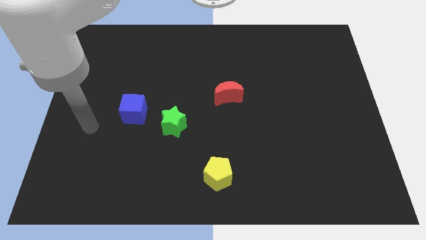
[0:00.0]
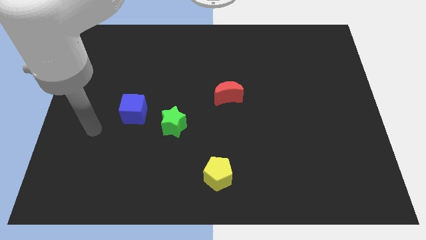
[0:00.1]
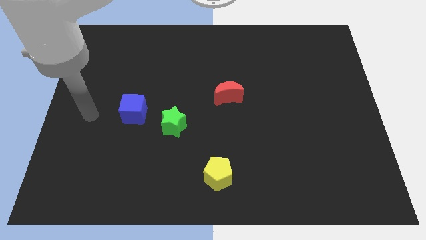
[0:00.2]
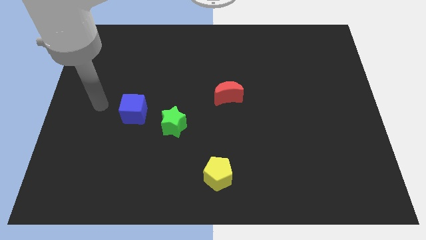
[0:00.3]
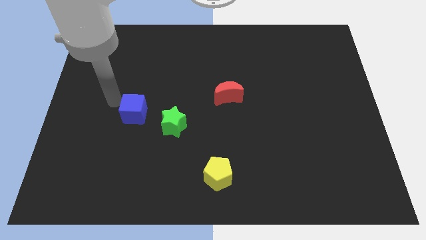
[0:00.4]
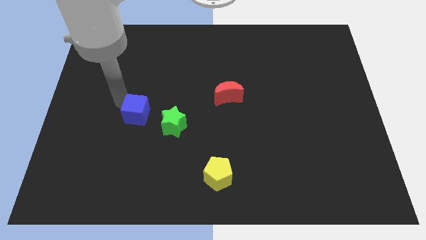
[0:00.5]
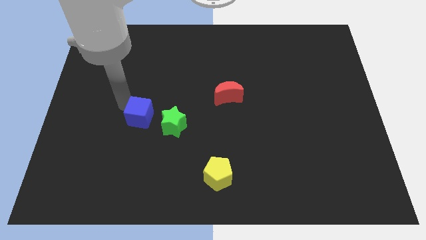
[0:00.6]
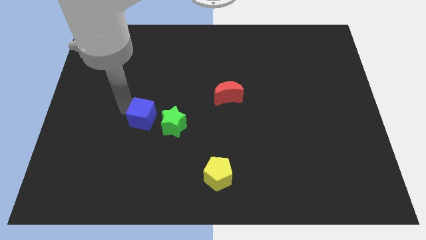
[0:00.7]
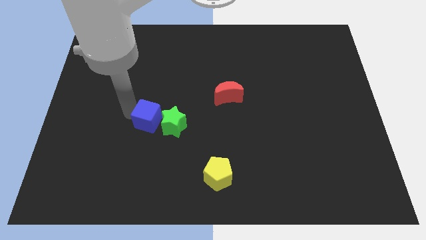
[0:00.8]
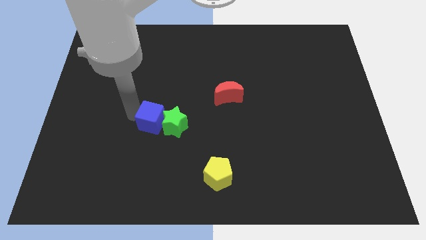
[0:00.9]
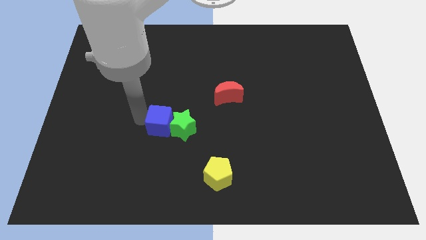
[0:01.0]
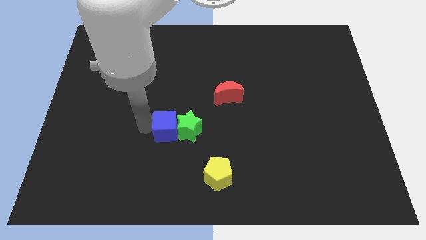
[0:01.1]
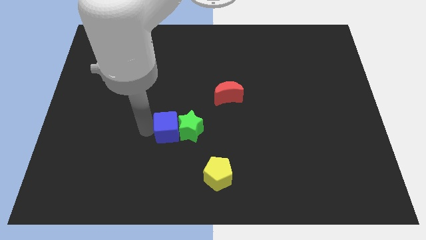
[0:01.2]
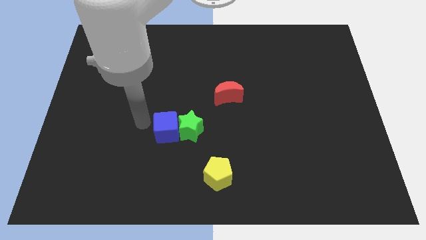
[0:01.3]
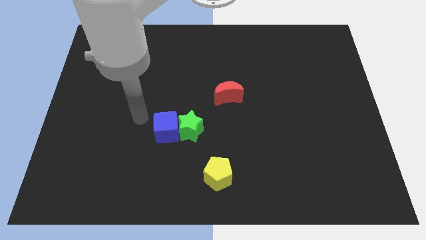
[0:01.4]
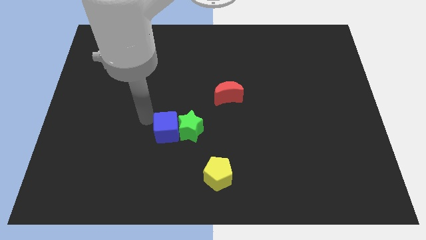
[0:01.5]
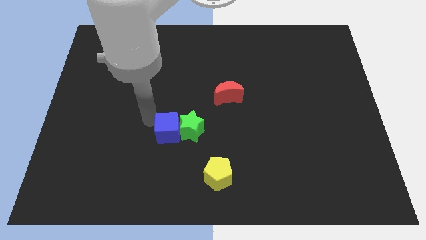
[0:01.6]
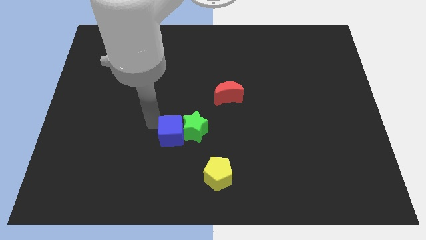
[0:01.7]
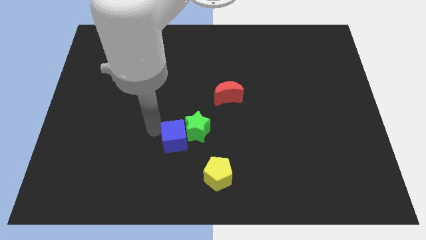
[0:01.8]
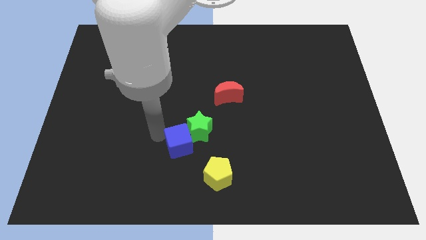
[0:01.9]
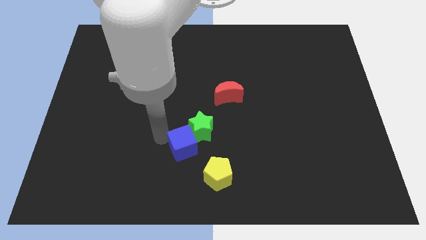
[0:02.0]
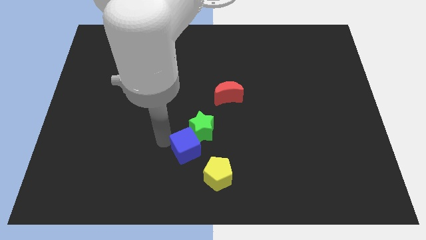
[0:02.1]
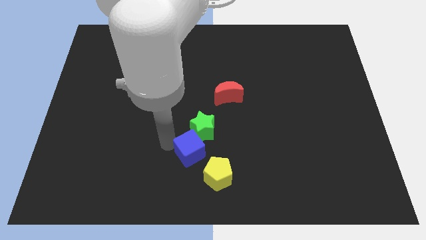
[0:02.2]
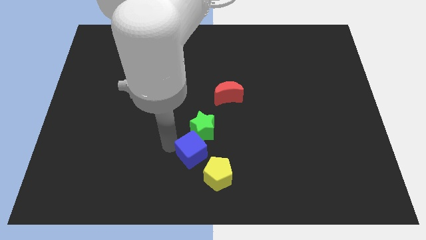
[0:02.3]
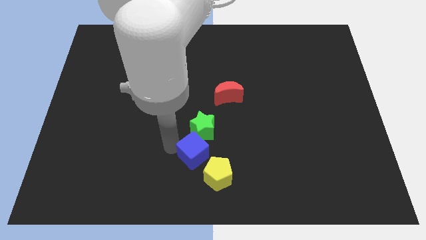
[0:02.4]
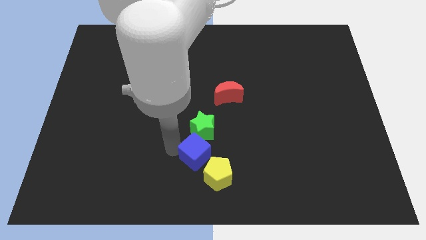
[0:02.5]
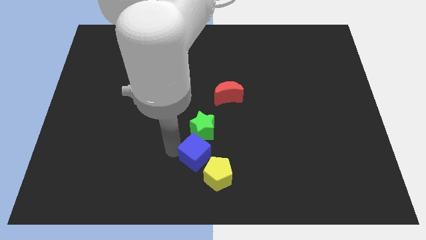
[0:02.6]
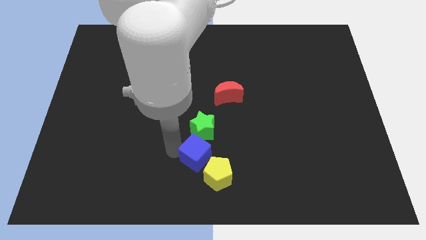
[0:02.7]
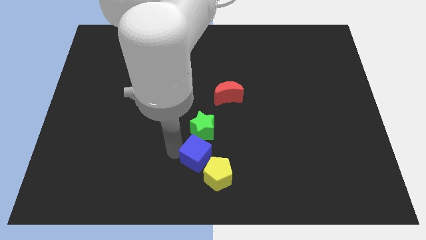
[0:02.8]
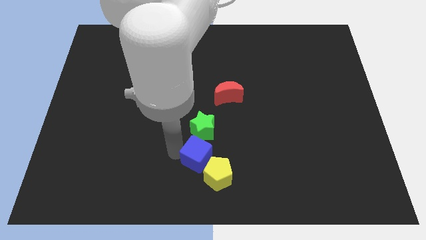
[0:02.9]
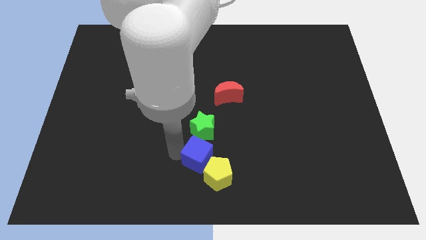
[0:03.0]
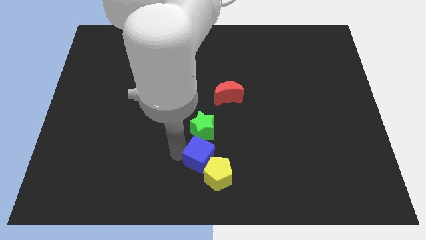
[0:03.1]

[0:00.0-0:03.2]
slide the cube towards the yellow pentagon

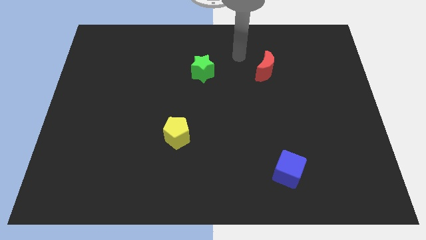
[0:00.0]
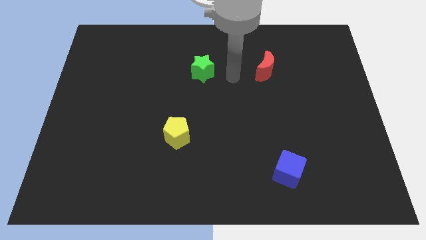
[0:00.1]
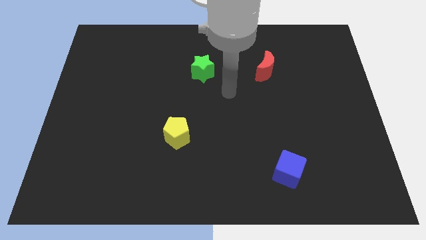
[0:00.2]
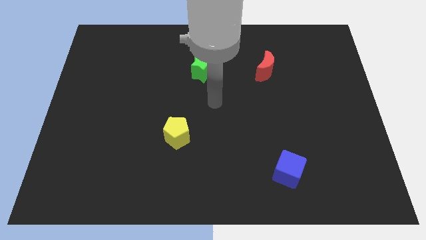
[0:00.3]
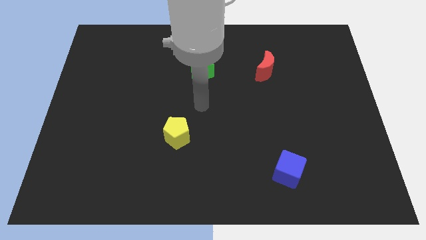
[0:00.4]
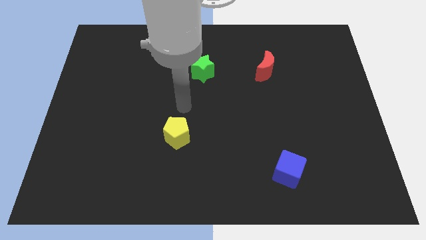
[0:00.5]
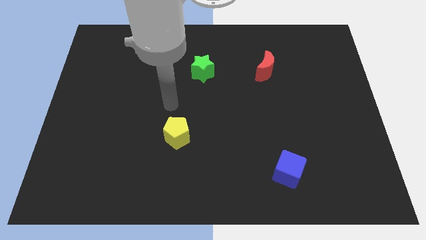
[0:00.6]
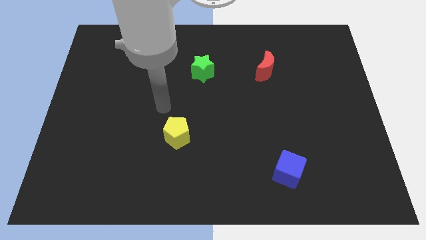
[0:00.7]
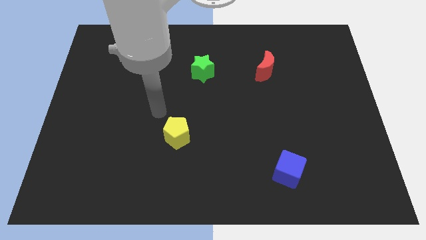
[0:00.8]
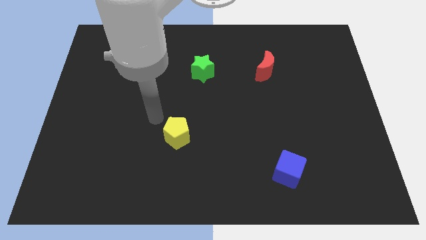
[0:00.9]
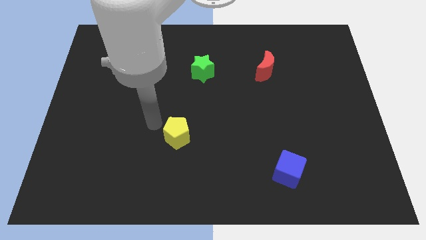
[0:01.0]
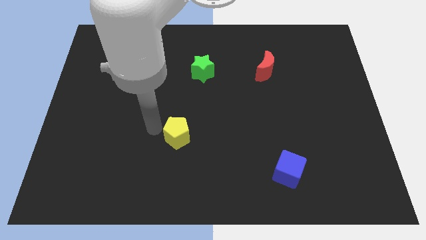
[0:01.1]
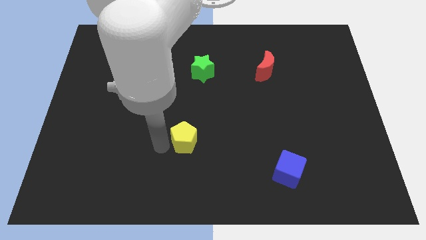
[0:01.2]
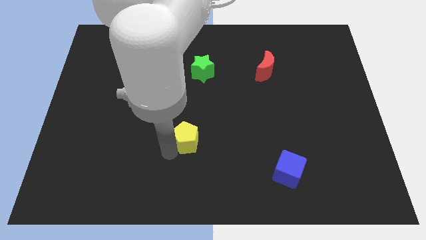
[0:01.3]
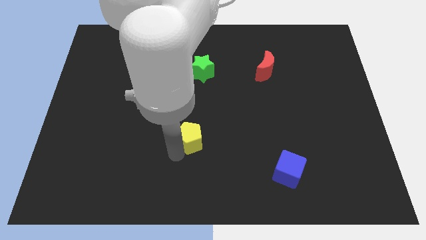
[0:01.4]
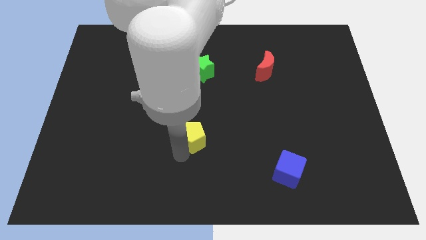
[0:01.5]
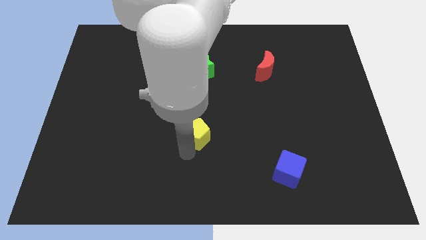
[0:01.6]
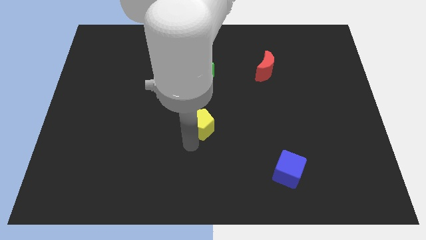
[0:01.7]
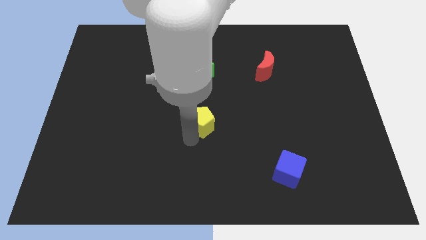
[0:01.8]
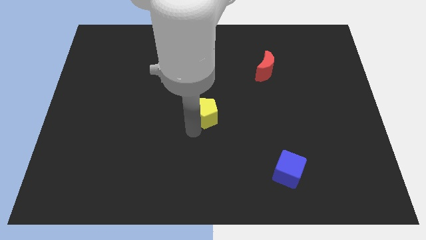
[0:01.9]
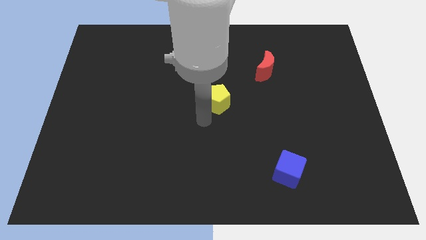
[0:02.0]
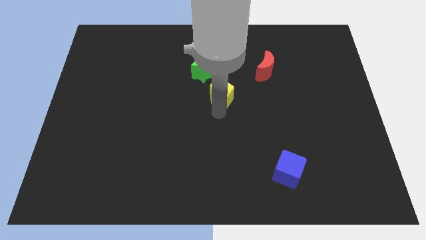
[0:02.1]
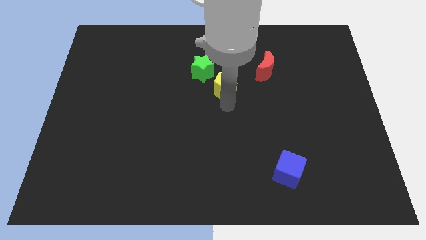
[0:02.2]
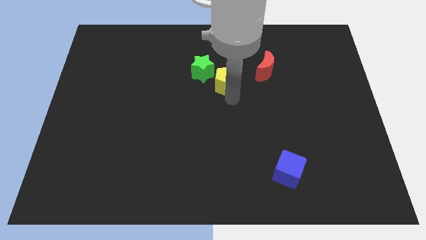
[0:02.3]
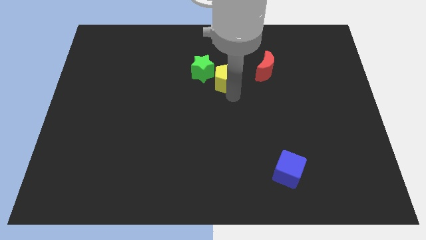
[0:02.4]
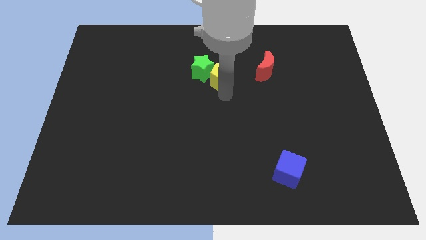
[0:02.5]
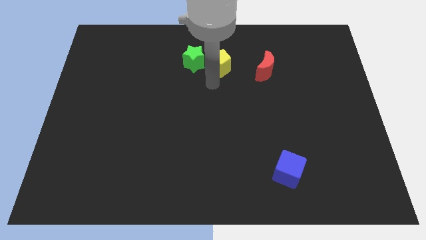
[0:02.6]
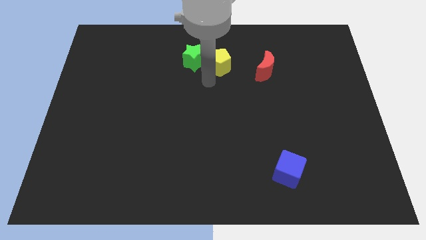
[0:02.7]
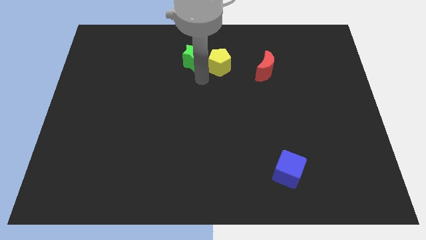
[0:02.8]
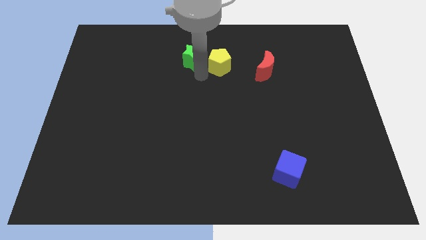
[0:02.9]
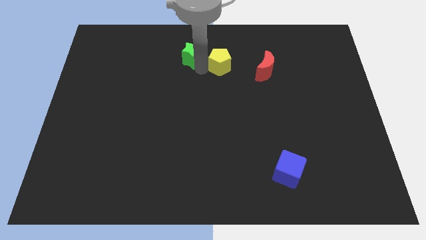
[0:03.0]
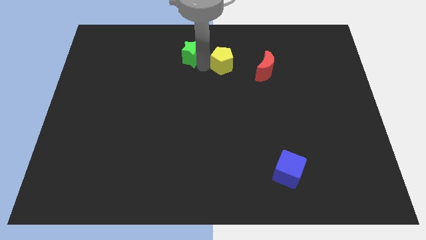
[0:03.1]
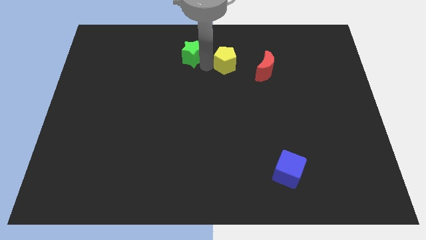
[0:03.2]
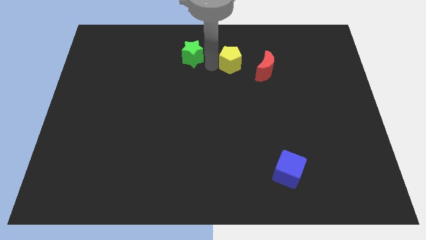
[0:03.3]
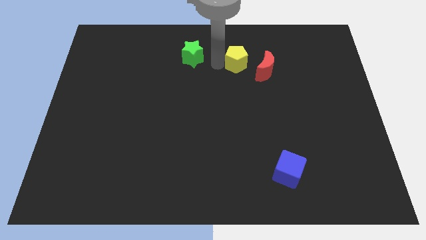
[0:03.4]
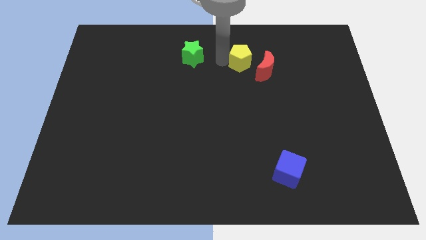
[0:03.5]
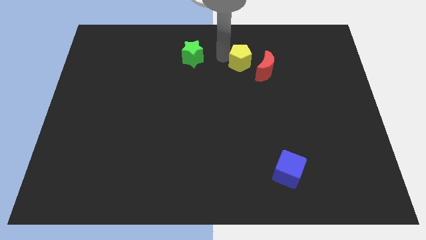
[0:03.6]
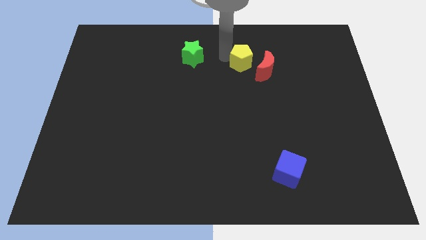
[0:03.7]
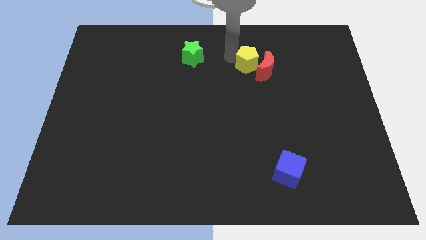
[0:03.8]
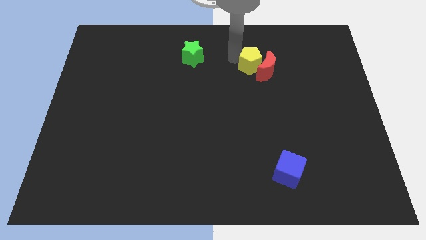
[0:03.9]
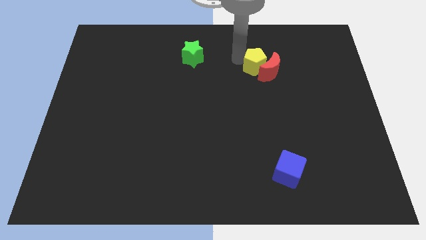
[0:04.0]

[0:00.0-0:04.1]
push the pentagon next to the red moon

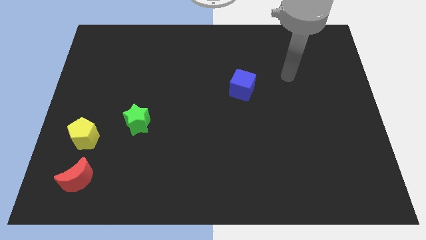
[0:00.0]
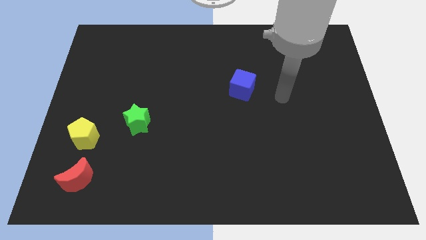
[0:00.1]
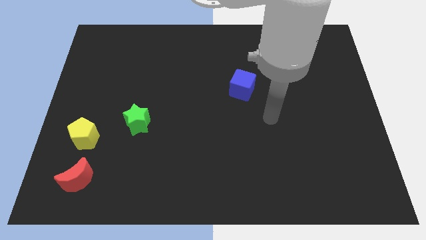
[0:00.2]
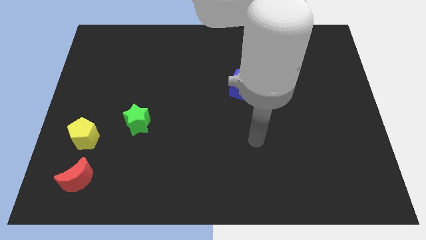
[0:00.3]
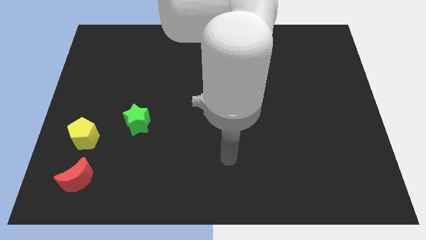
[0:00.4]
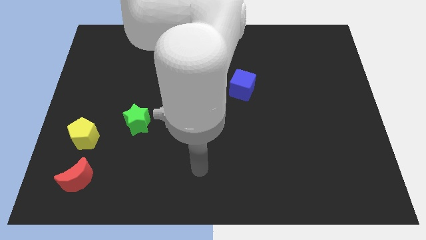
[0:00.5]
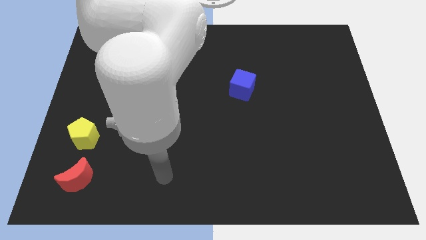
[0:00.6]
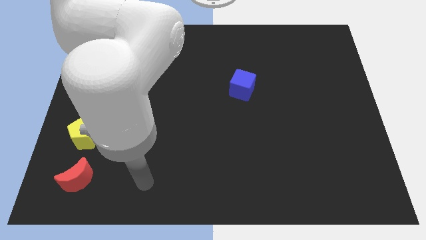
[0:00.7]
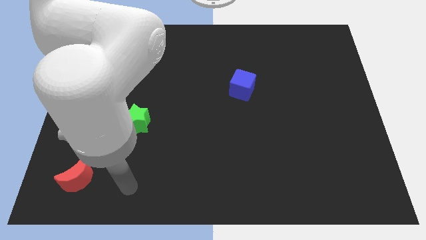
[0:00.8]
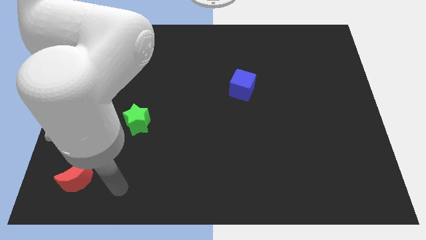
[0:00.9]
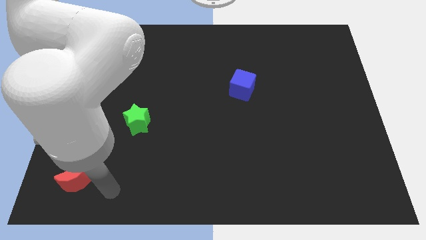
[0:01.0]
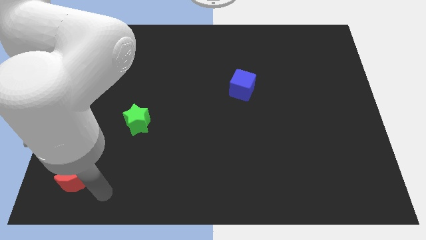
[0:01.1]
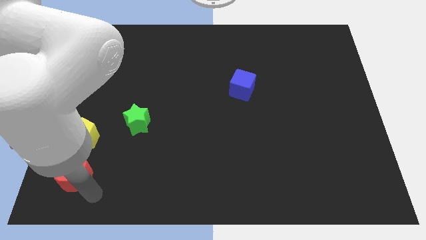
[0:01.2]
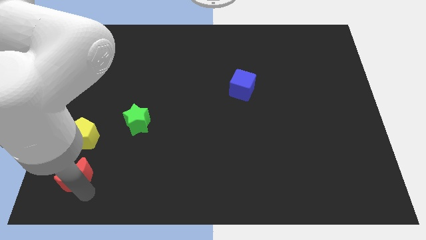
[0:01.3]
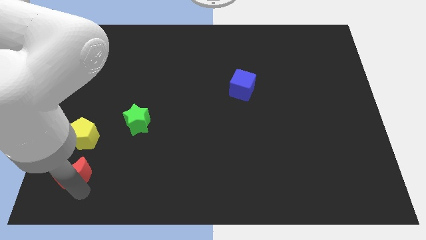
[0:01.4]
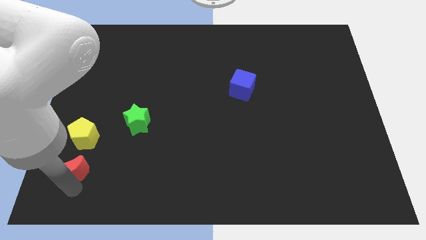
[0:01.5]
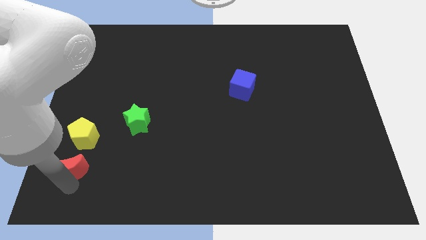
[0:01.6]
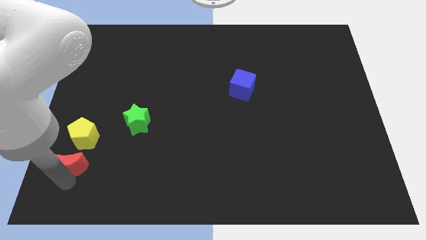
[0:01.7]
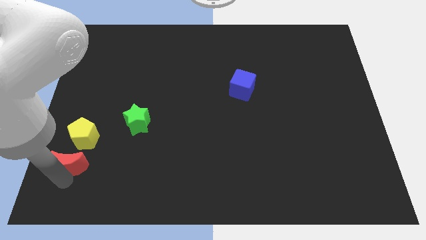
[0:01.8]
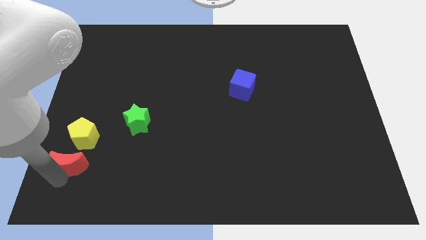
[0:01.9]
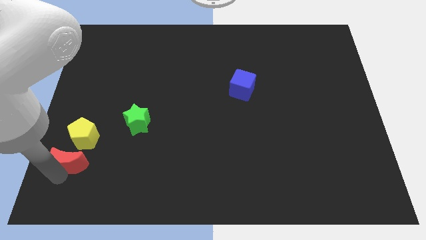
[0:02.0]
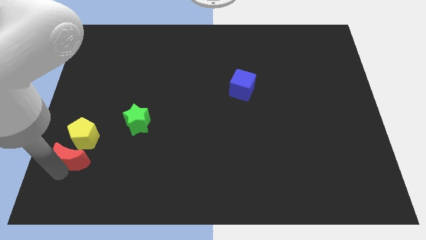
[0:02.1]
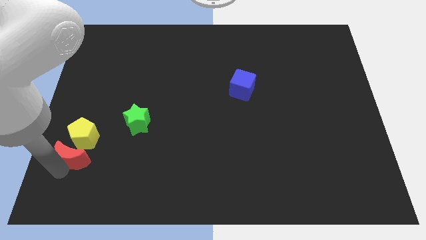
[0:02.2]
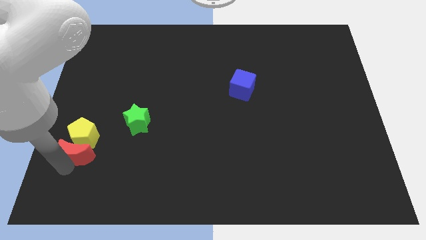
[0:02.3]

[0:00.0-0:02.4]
move the moon close to the pentagon
